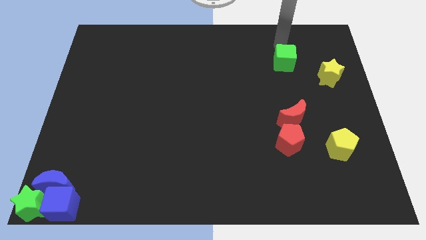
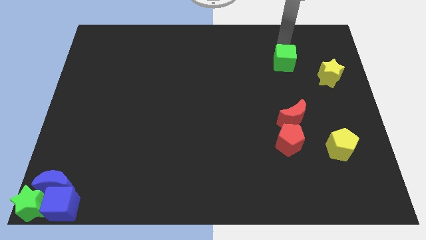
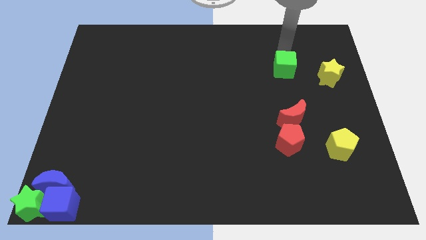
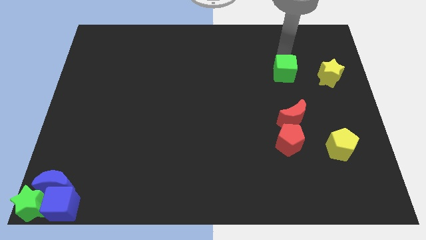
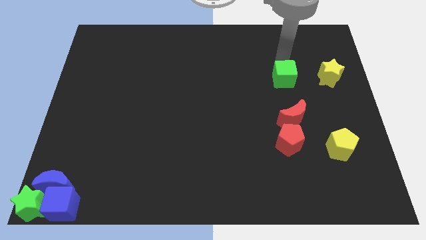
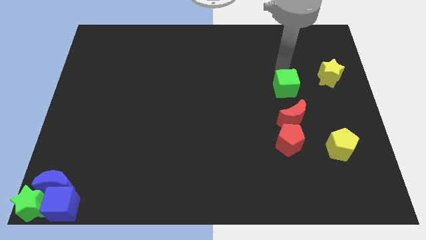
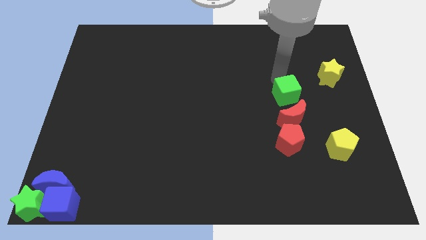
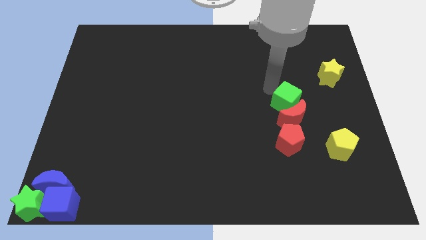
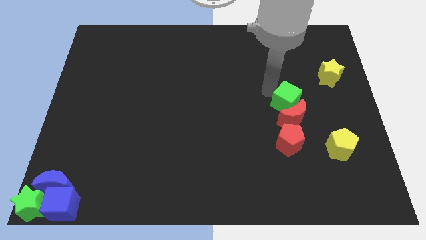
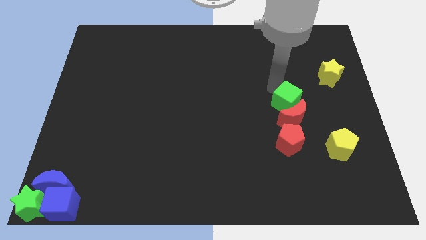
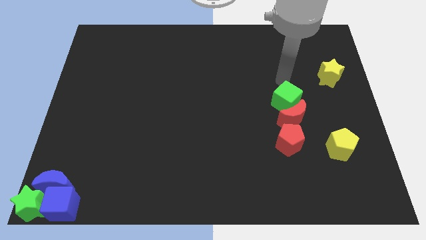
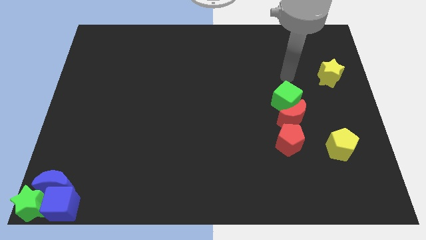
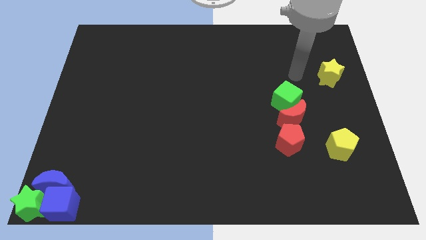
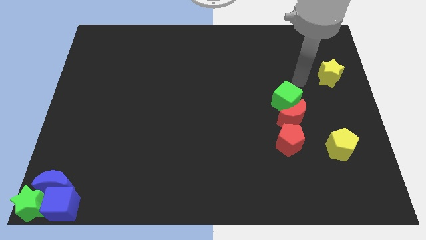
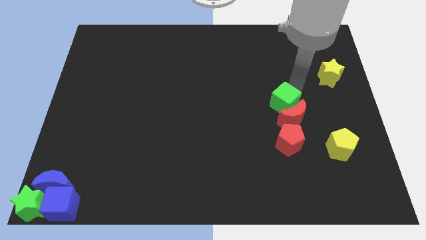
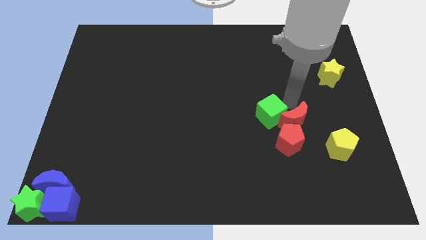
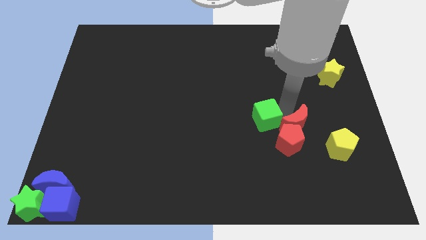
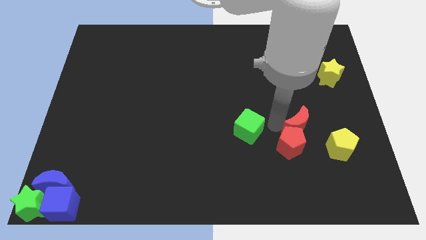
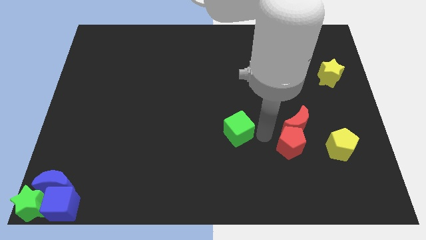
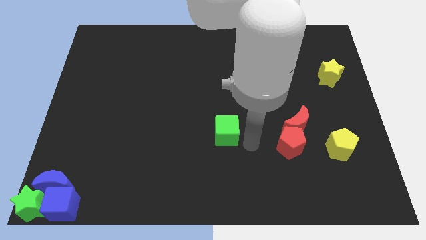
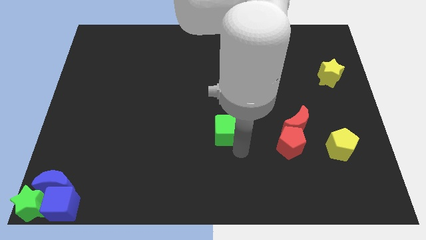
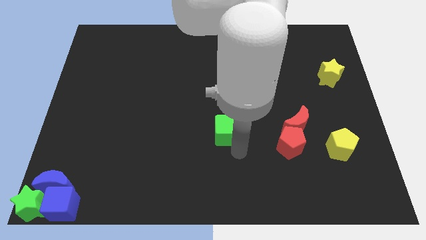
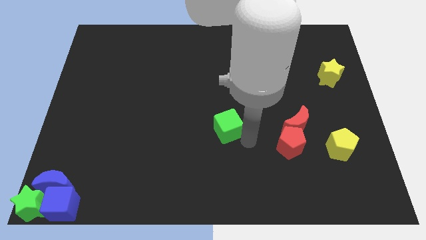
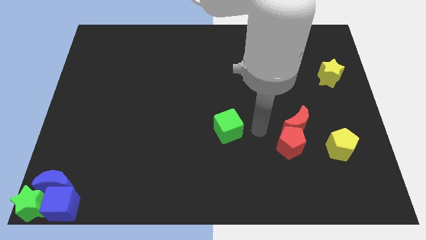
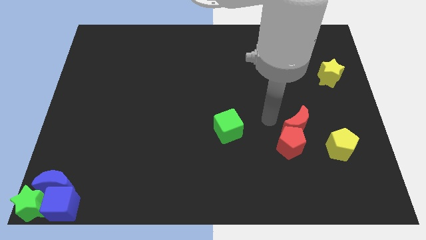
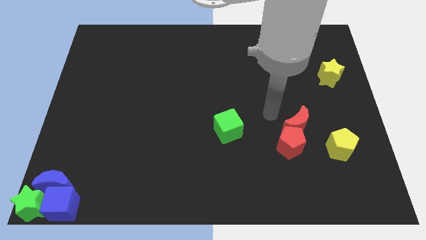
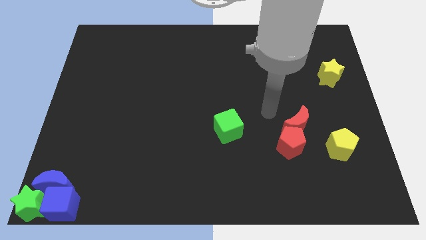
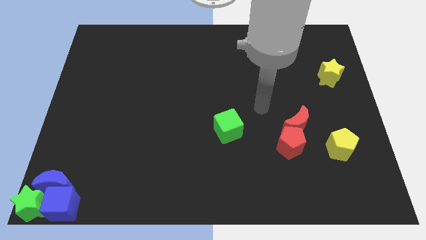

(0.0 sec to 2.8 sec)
place the green cube left to the red pentagon

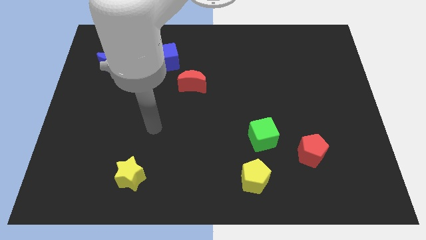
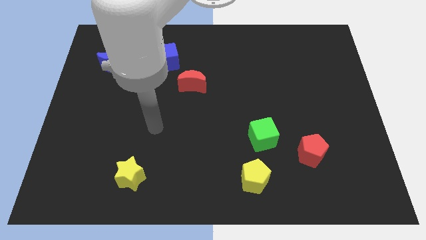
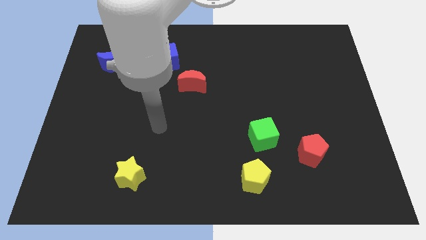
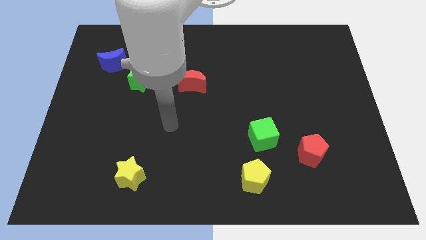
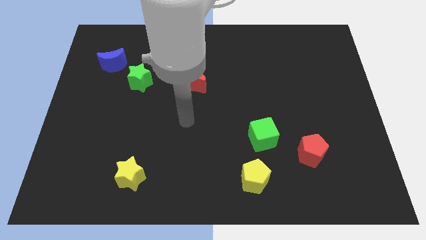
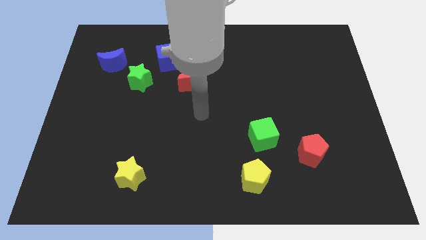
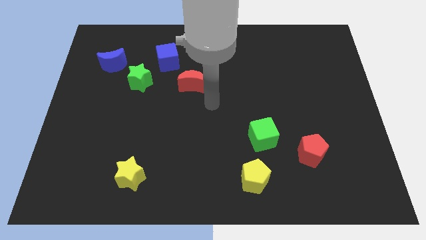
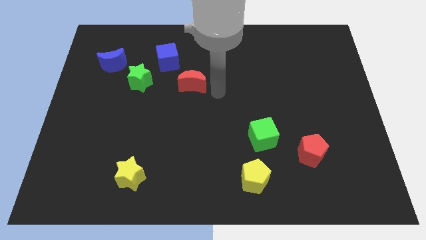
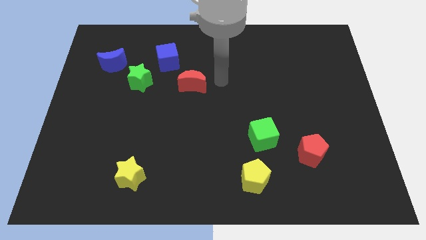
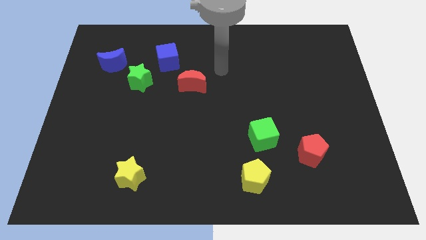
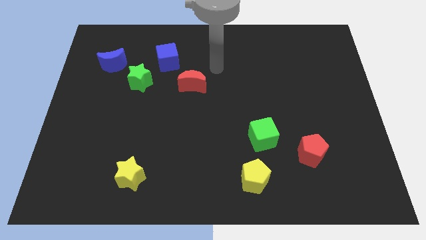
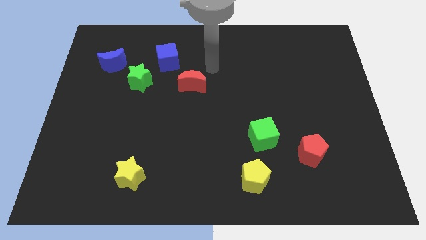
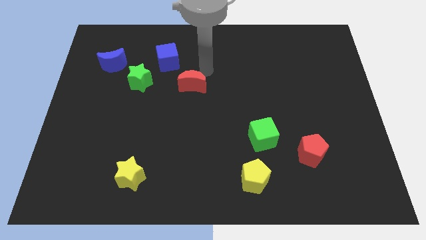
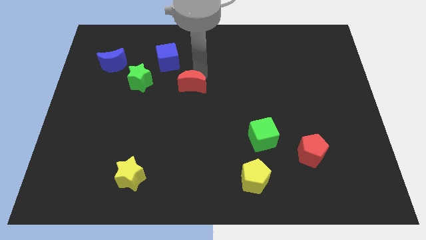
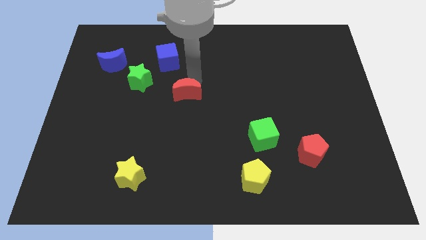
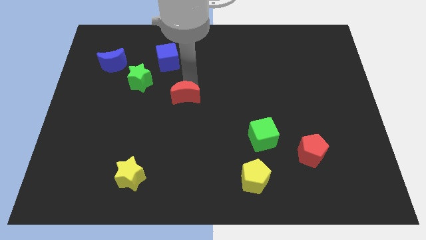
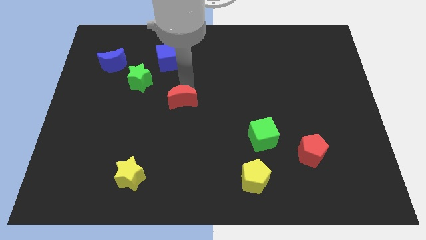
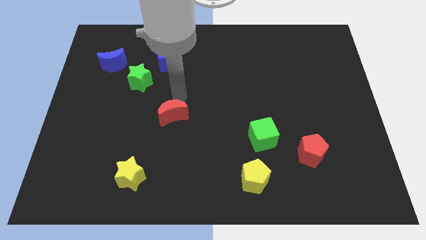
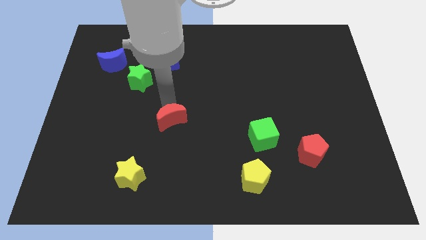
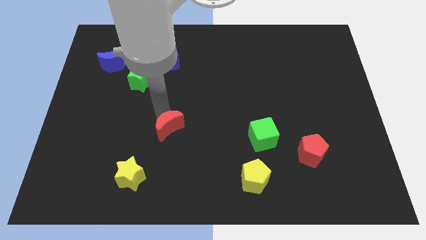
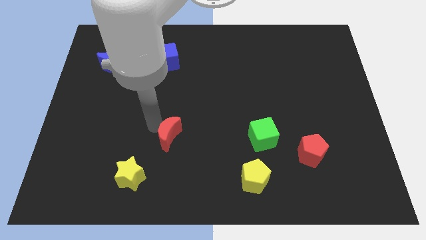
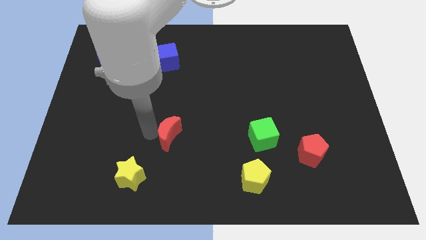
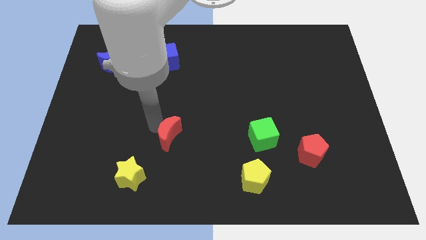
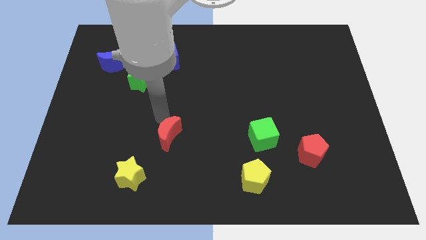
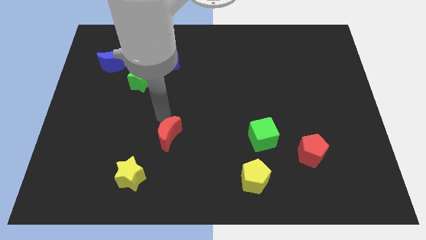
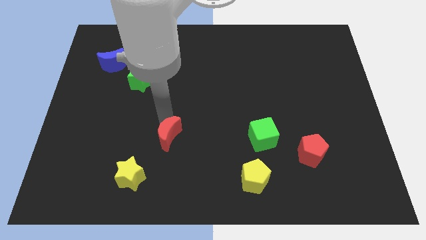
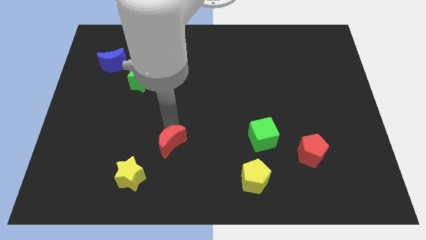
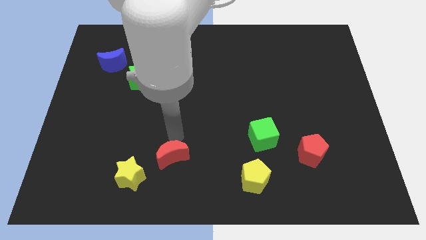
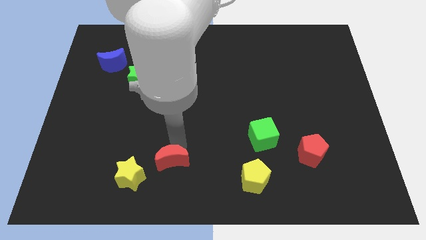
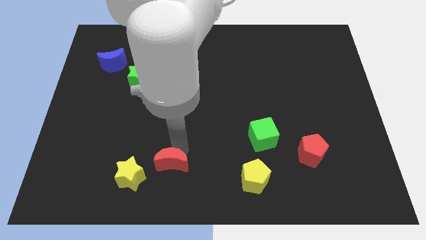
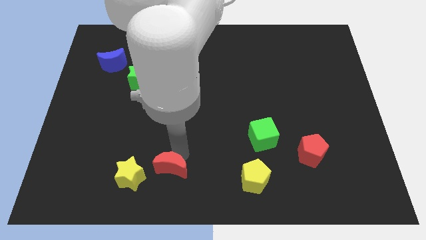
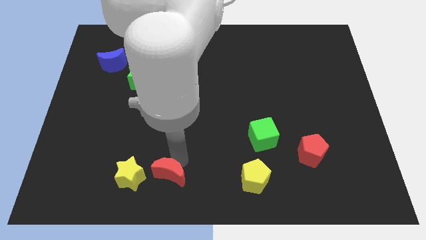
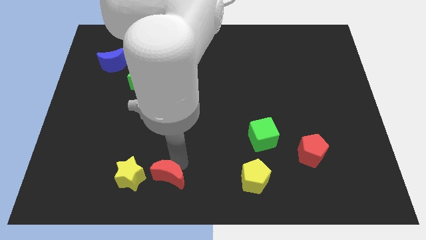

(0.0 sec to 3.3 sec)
put the red crescent on the right side of the yellow star

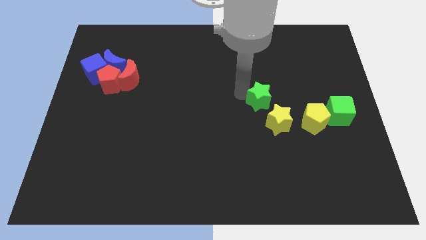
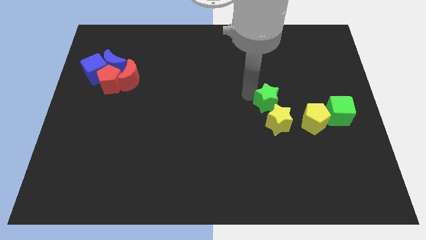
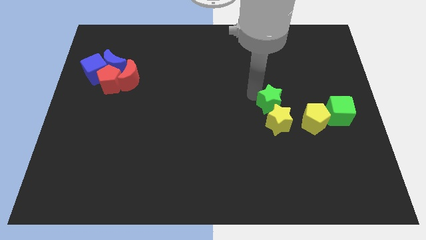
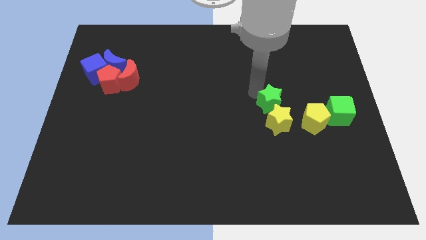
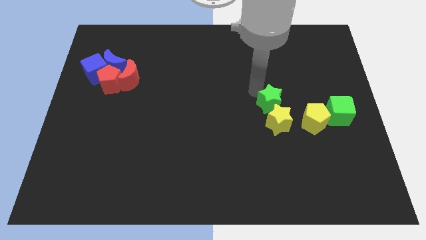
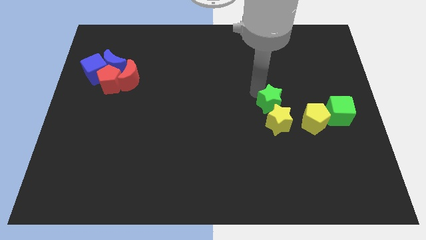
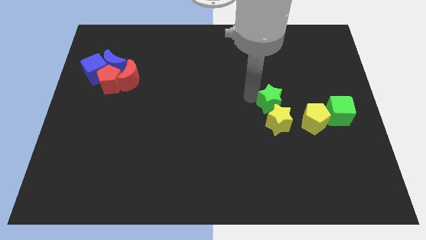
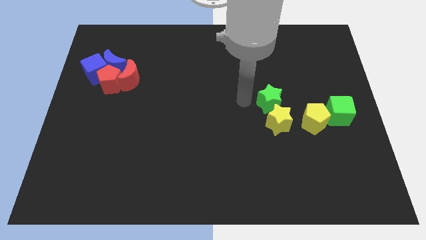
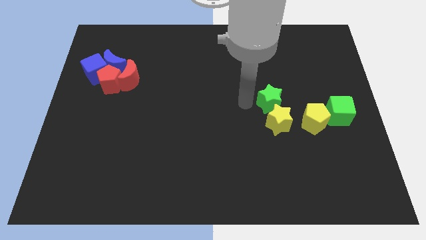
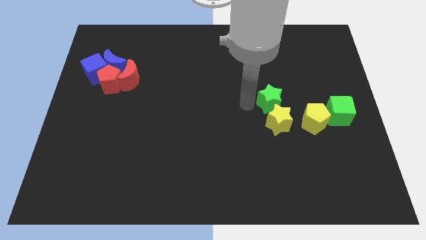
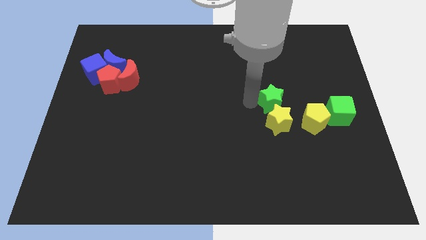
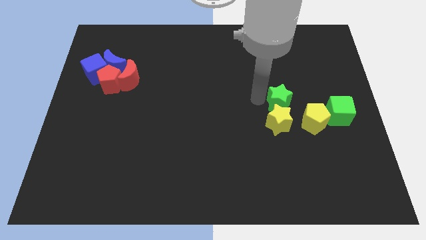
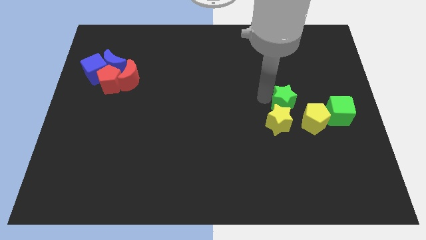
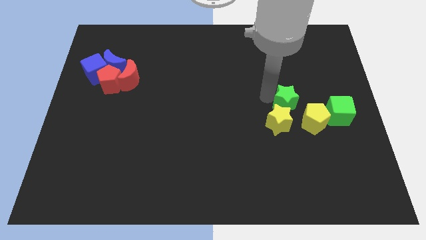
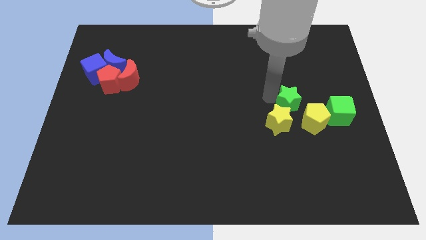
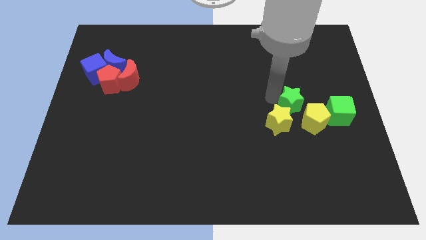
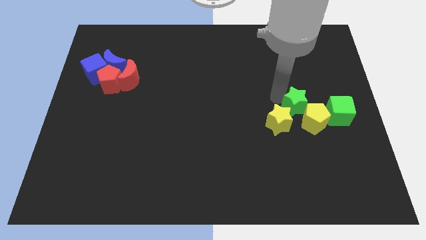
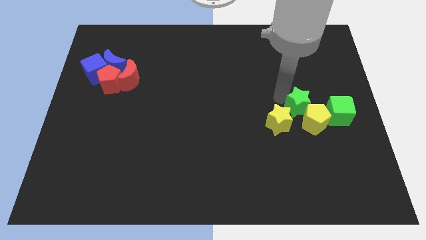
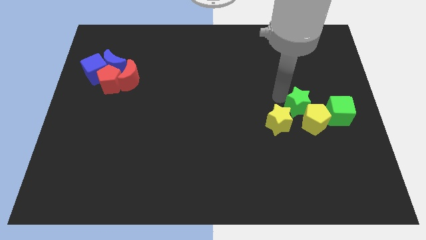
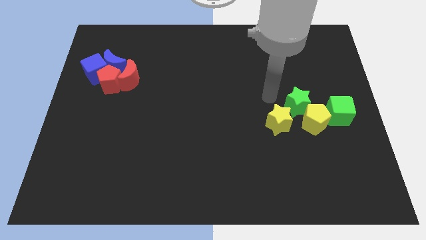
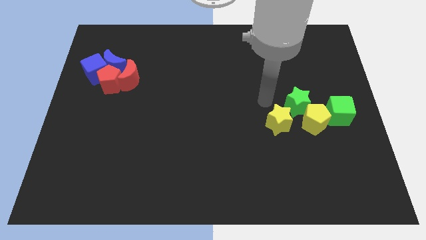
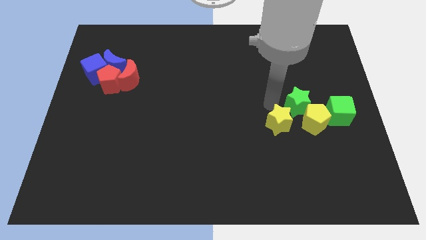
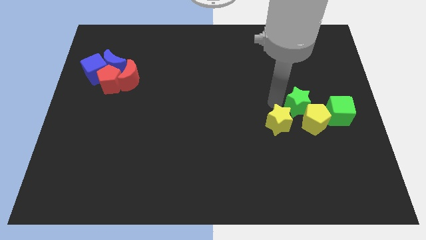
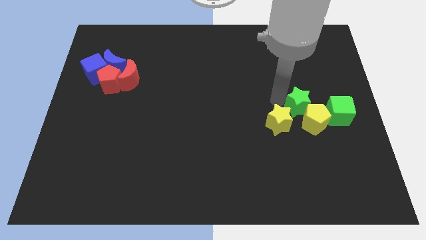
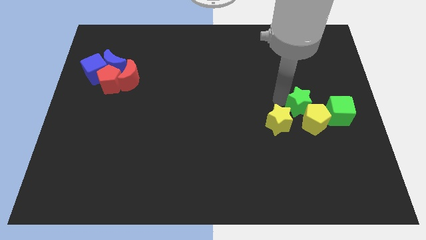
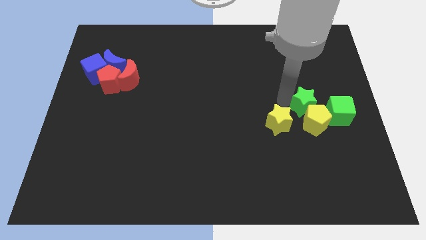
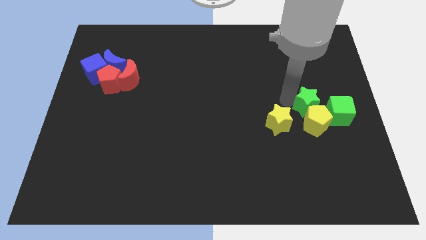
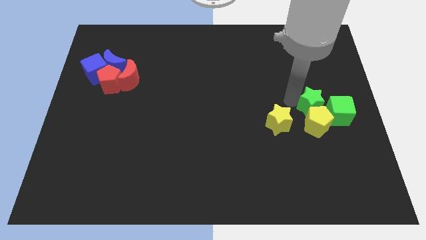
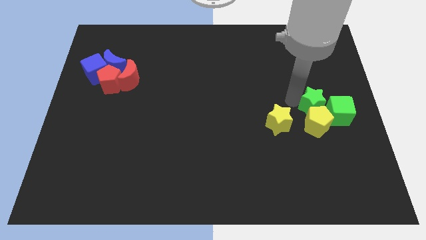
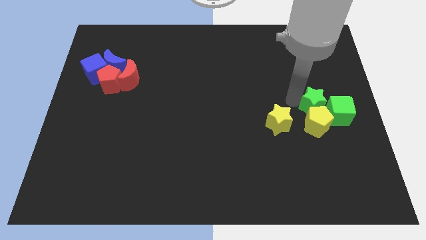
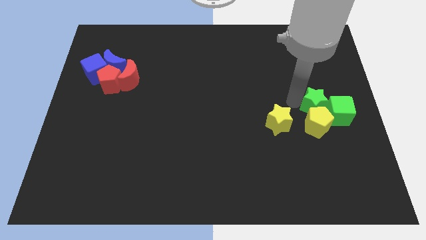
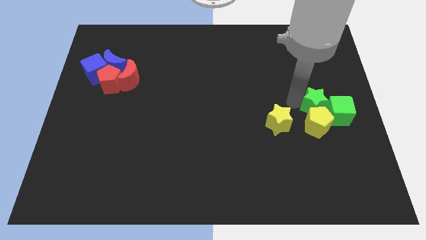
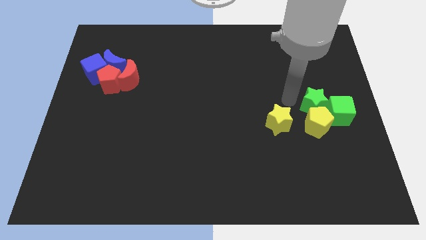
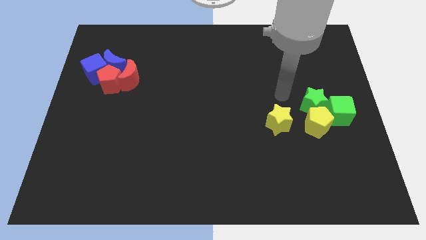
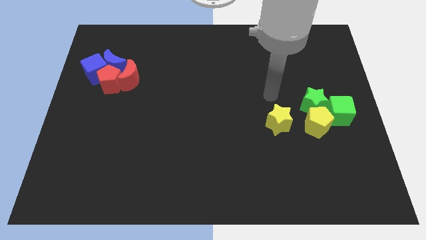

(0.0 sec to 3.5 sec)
move the green star into the yellow pentagon
